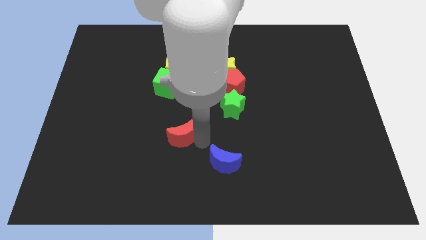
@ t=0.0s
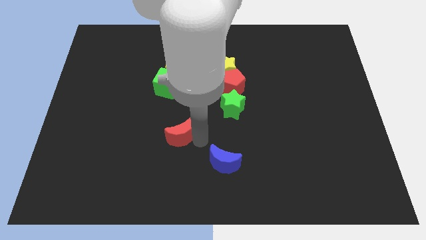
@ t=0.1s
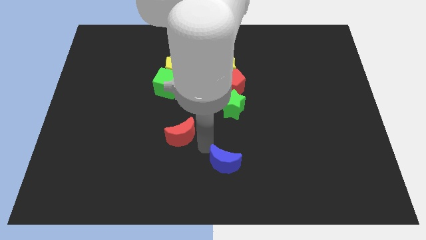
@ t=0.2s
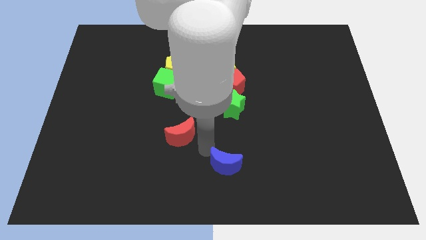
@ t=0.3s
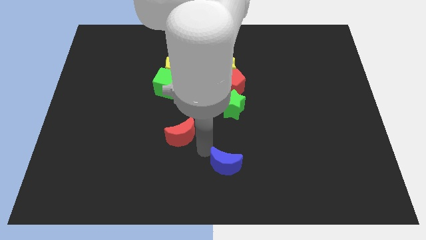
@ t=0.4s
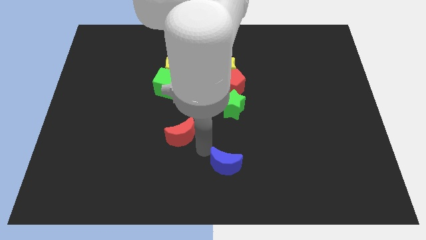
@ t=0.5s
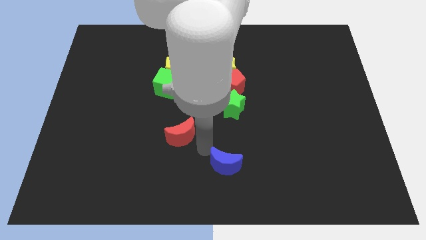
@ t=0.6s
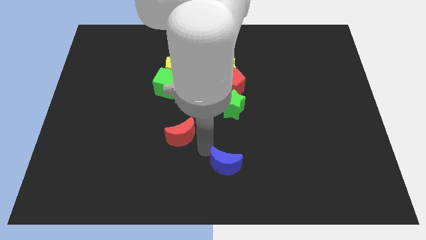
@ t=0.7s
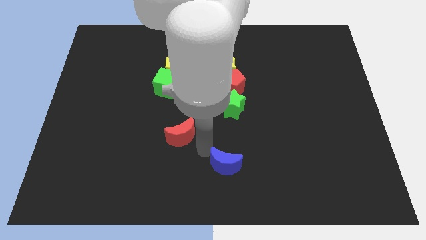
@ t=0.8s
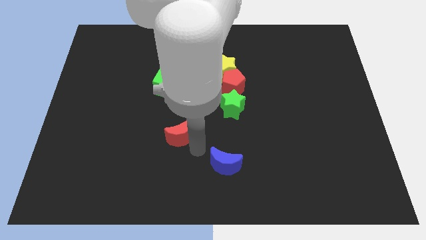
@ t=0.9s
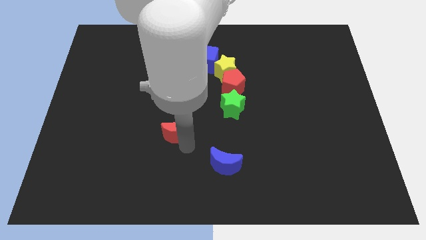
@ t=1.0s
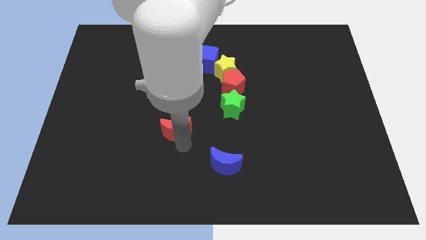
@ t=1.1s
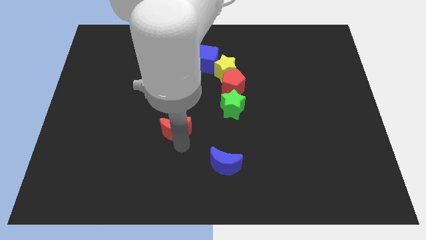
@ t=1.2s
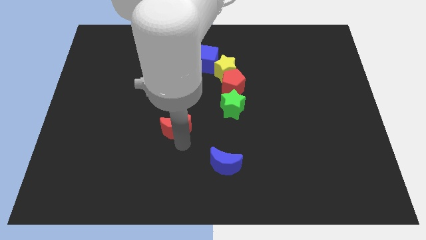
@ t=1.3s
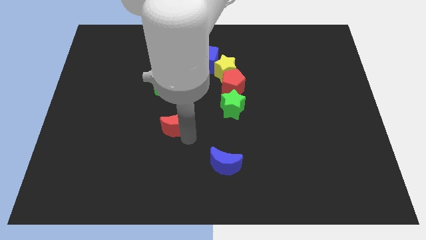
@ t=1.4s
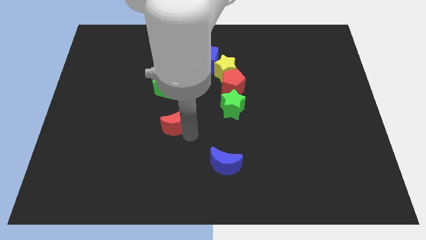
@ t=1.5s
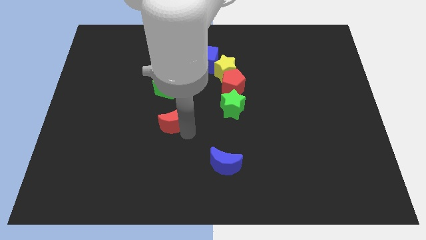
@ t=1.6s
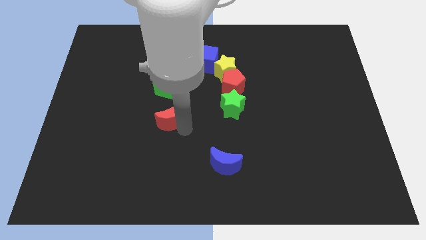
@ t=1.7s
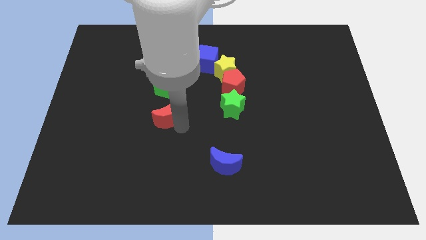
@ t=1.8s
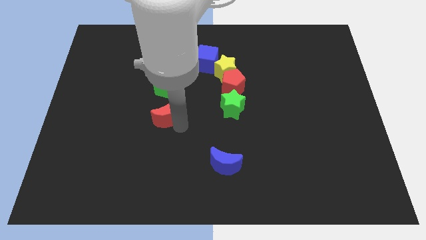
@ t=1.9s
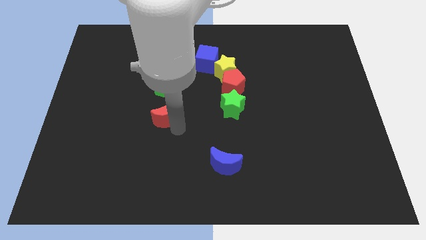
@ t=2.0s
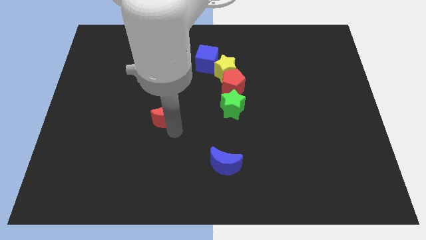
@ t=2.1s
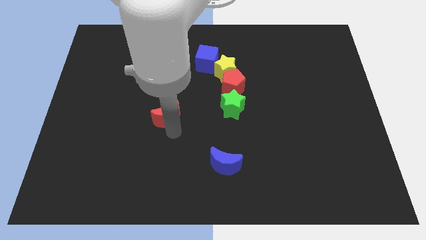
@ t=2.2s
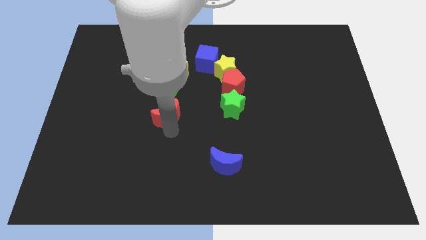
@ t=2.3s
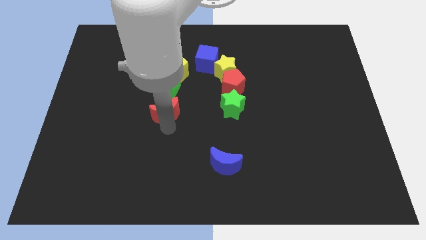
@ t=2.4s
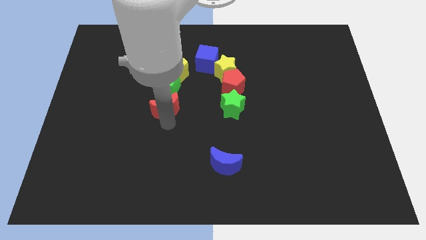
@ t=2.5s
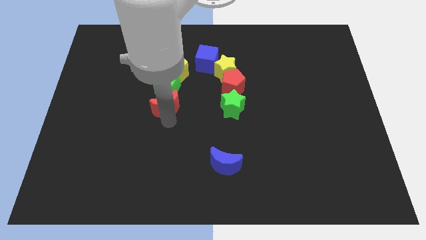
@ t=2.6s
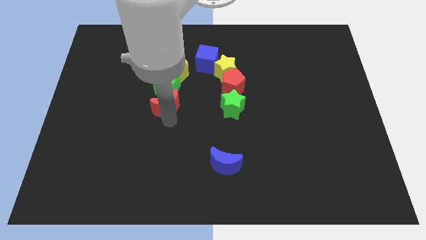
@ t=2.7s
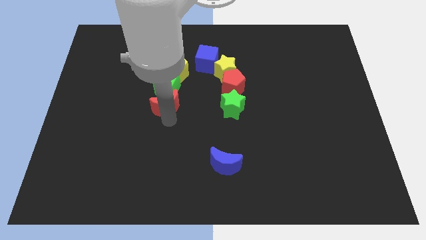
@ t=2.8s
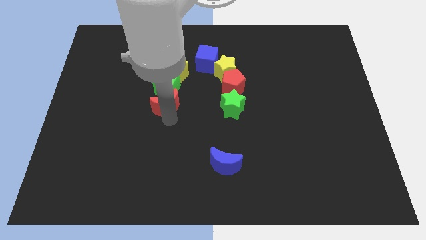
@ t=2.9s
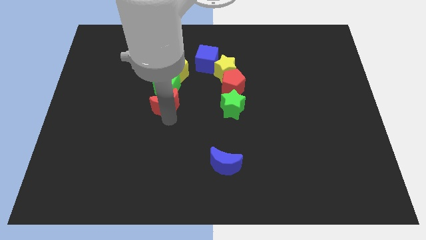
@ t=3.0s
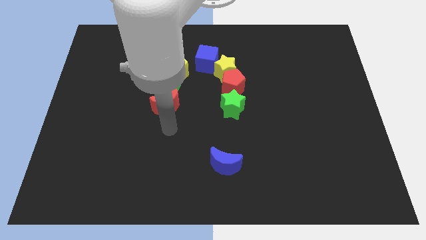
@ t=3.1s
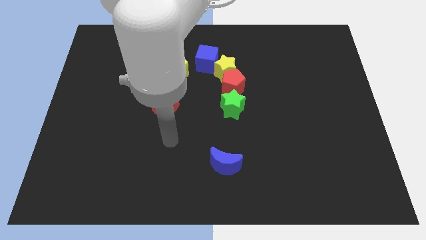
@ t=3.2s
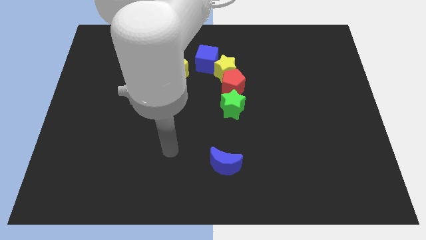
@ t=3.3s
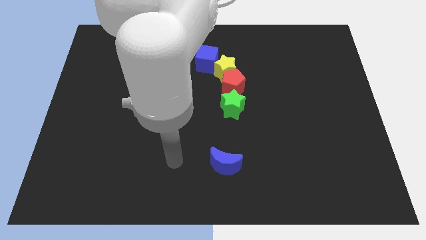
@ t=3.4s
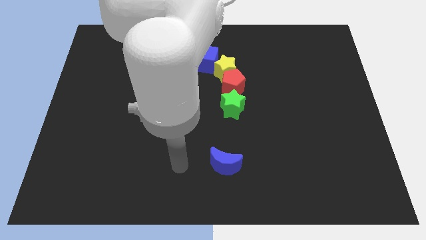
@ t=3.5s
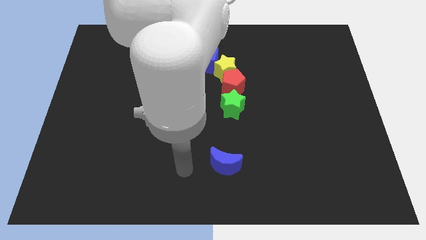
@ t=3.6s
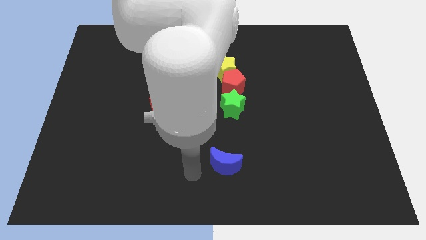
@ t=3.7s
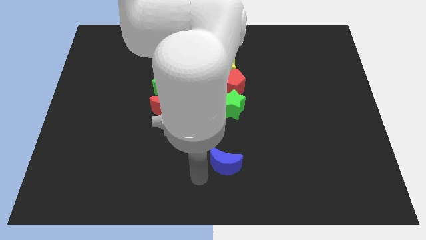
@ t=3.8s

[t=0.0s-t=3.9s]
place the red moon below the green cube

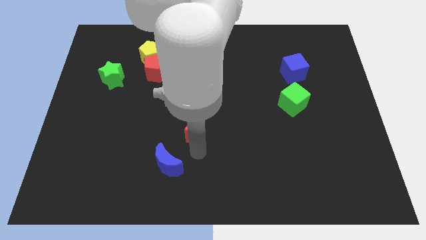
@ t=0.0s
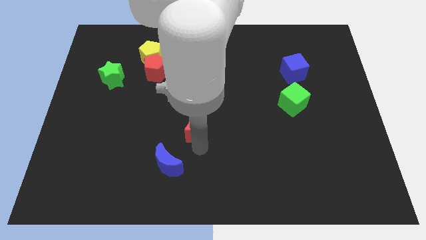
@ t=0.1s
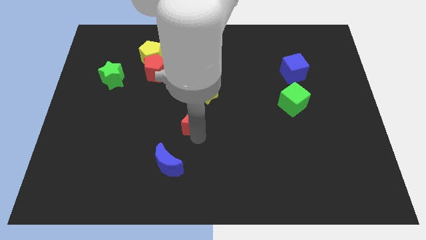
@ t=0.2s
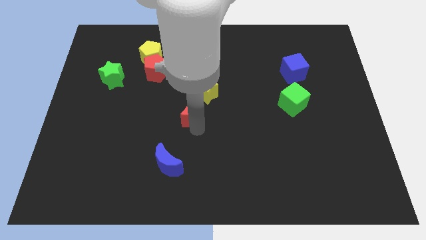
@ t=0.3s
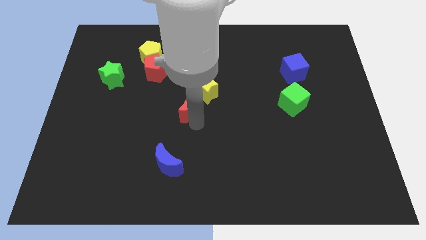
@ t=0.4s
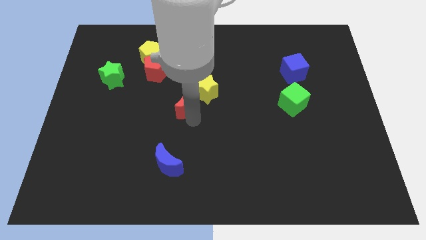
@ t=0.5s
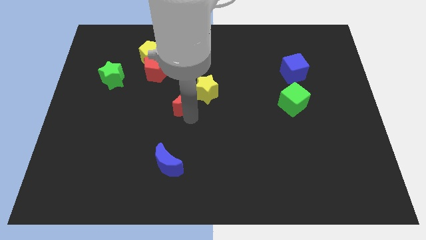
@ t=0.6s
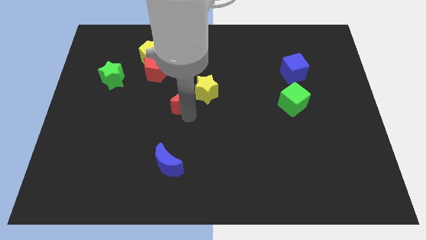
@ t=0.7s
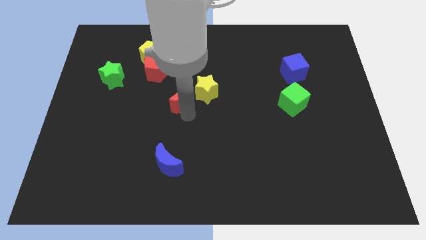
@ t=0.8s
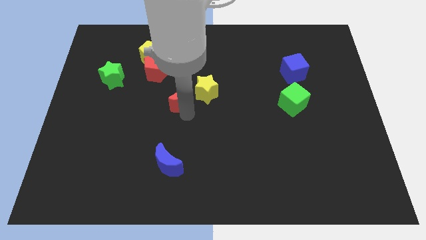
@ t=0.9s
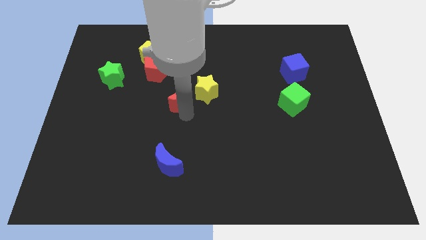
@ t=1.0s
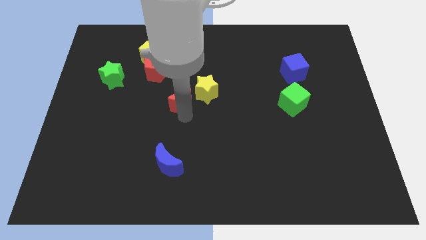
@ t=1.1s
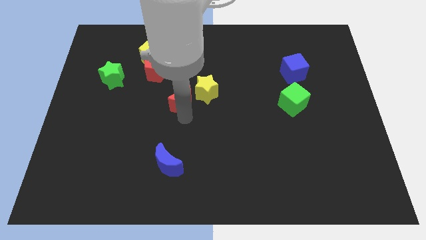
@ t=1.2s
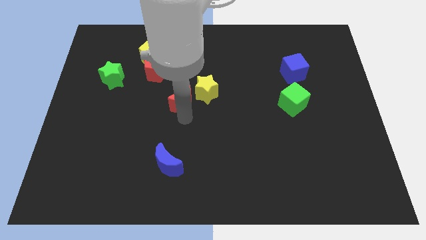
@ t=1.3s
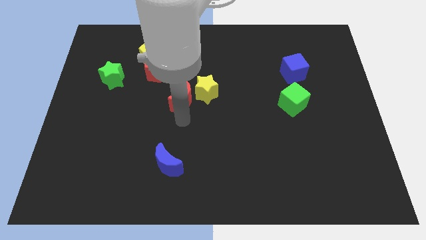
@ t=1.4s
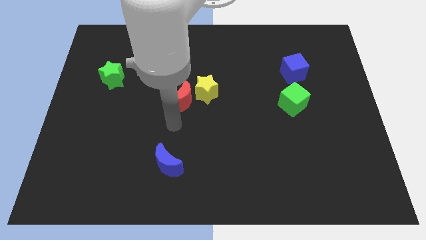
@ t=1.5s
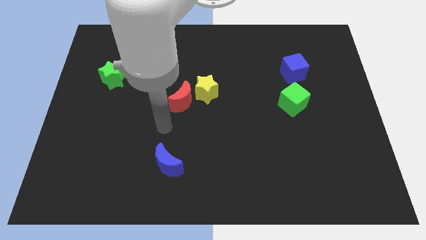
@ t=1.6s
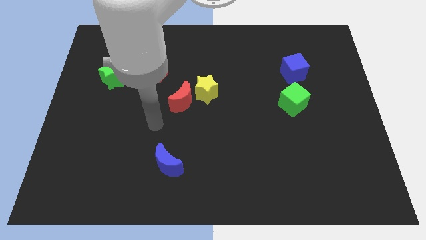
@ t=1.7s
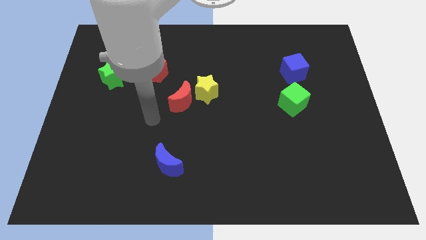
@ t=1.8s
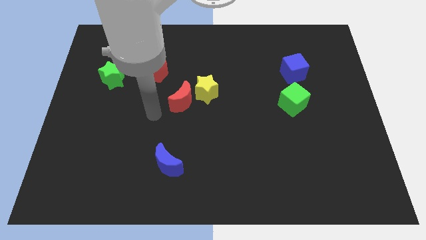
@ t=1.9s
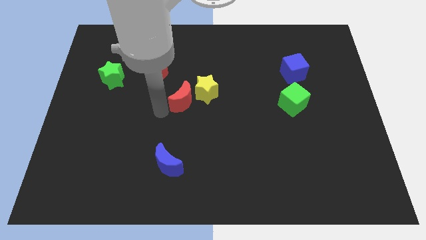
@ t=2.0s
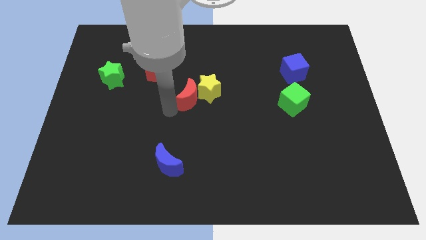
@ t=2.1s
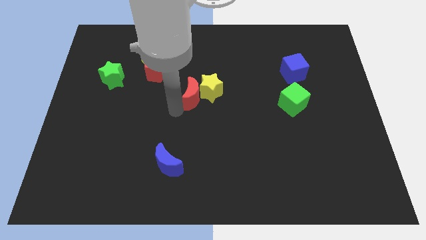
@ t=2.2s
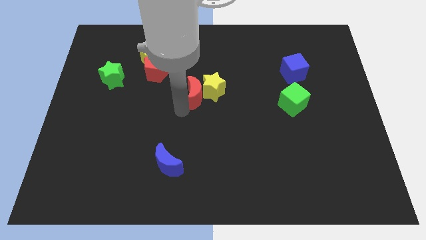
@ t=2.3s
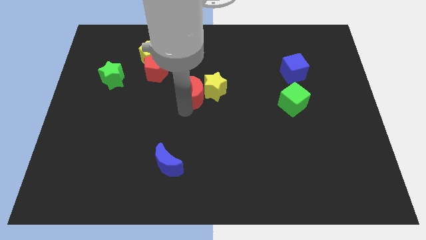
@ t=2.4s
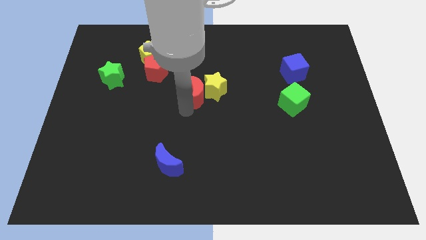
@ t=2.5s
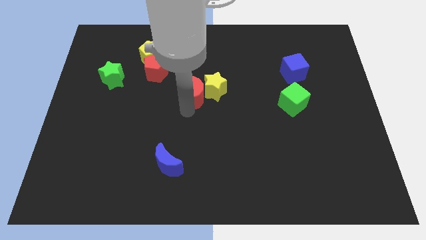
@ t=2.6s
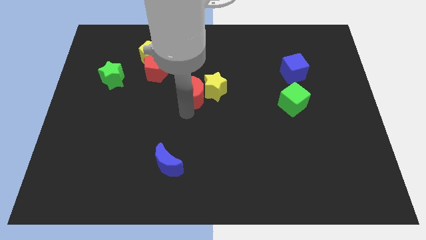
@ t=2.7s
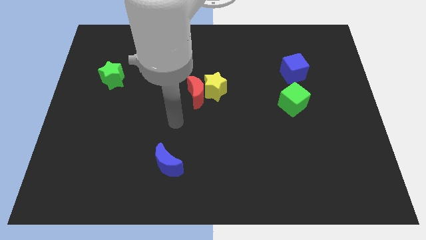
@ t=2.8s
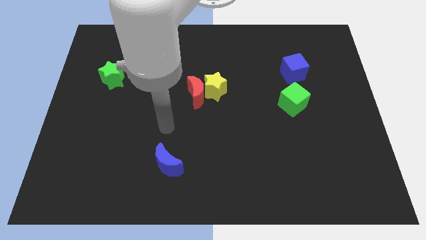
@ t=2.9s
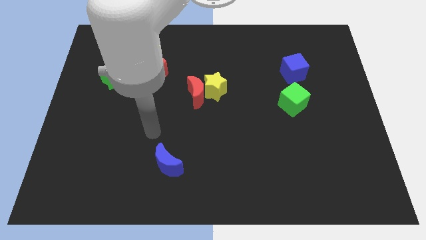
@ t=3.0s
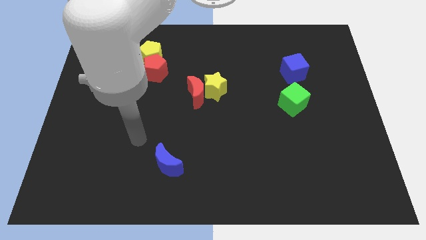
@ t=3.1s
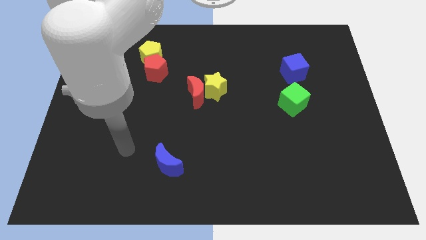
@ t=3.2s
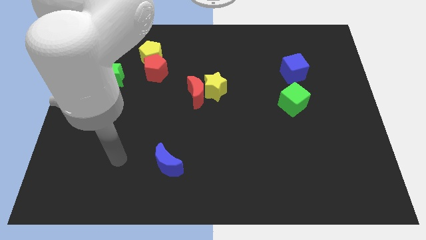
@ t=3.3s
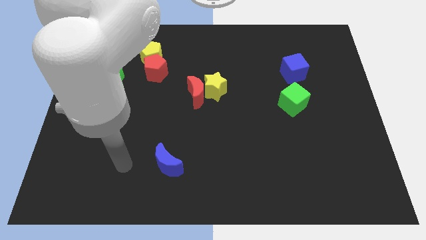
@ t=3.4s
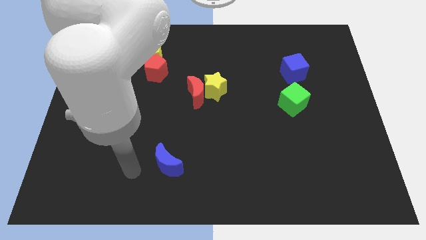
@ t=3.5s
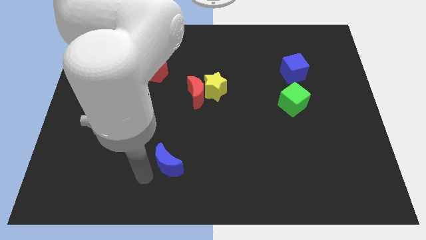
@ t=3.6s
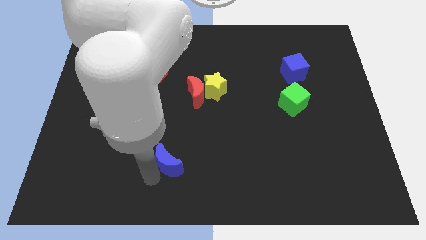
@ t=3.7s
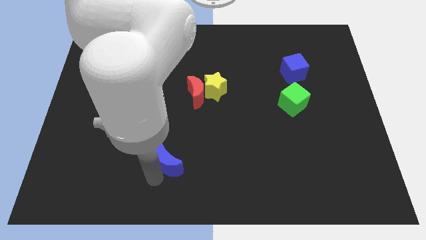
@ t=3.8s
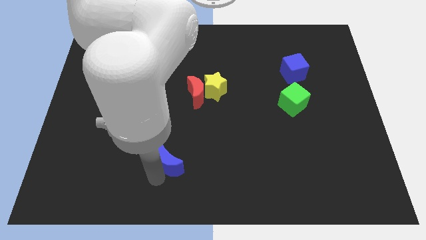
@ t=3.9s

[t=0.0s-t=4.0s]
move red moon into yellow star

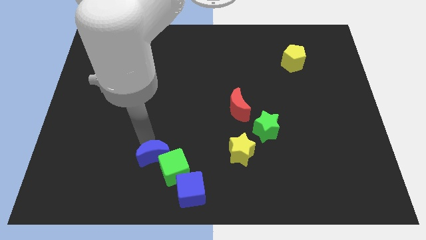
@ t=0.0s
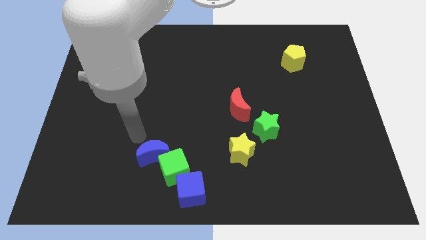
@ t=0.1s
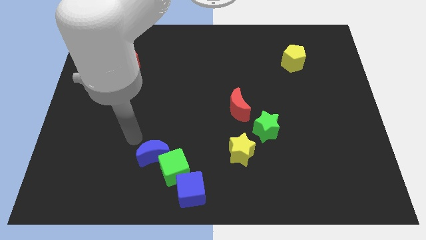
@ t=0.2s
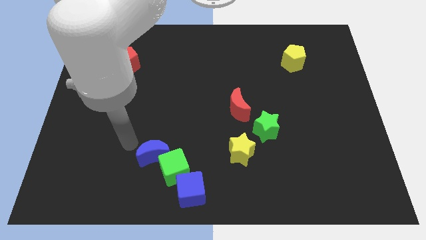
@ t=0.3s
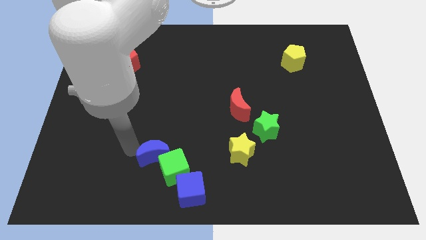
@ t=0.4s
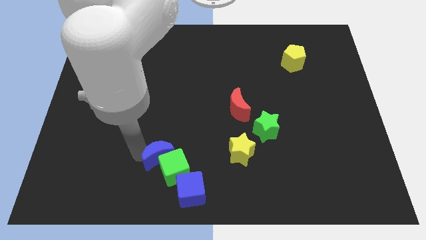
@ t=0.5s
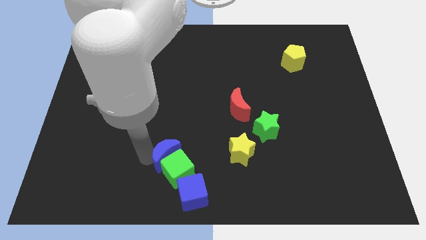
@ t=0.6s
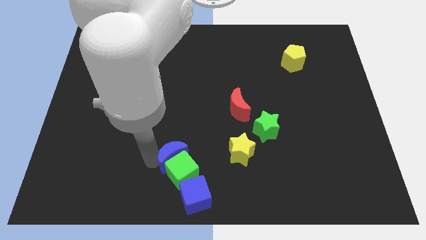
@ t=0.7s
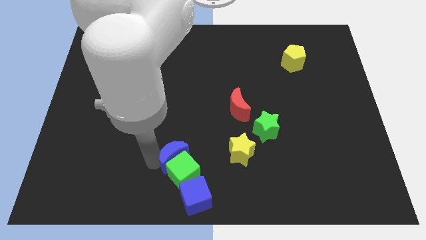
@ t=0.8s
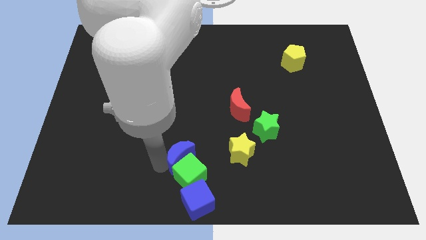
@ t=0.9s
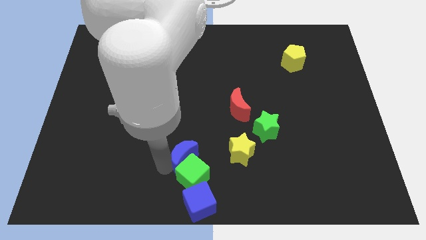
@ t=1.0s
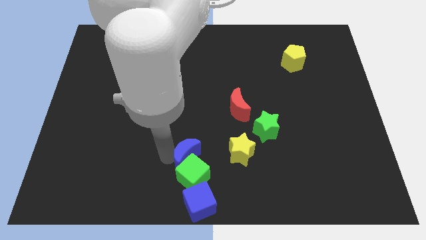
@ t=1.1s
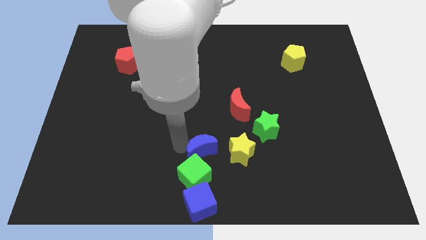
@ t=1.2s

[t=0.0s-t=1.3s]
push the blue crescent into the green cube from the top
